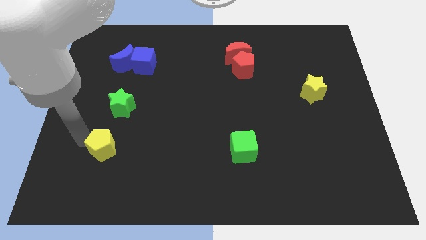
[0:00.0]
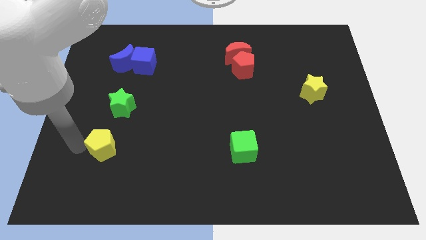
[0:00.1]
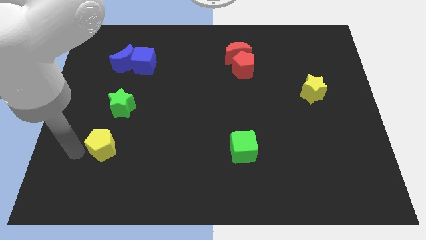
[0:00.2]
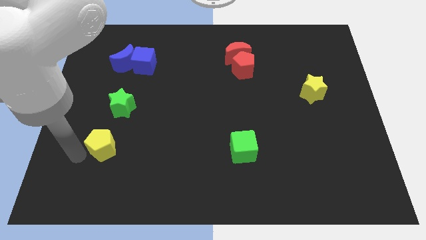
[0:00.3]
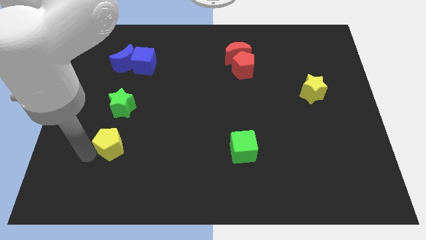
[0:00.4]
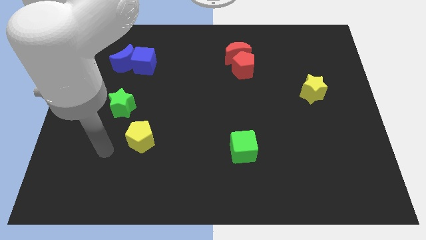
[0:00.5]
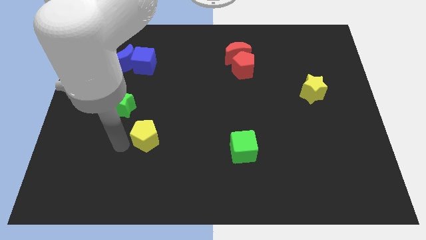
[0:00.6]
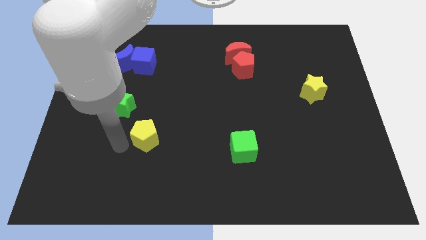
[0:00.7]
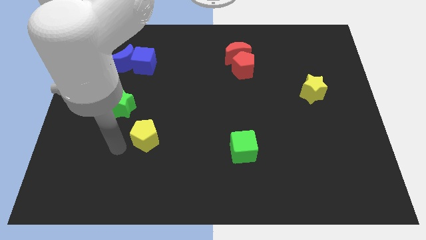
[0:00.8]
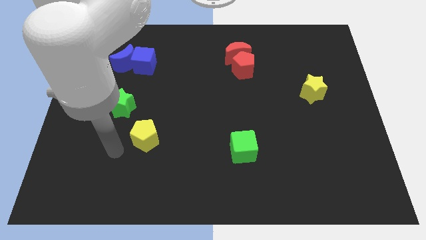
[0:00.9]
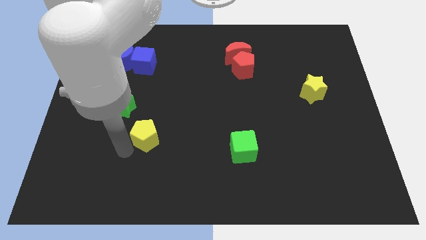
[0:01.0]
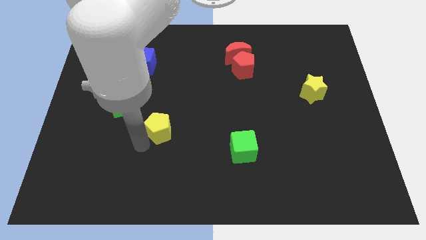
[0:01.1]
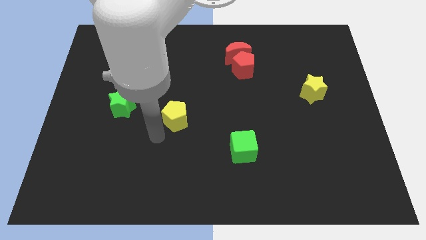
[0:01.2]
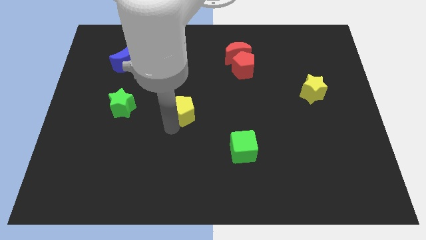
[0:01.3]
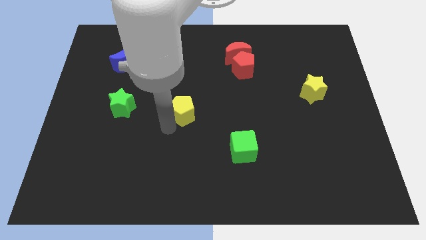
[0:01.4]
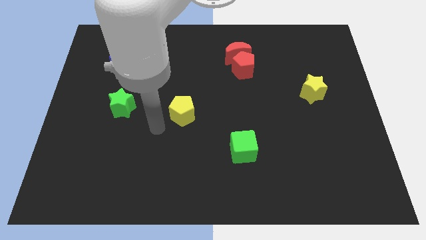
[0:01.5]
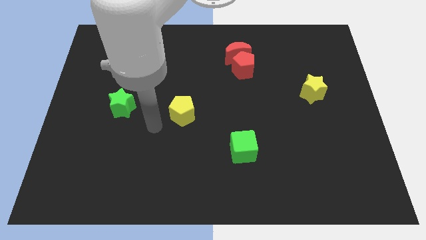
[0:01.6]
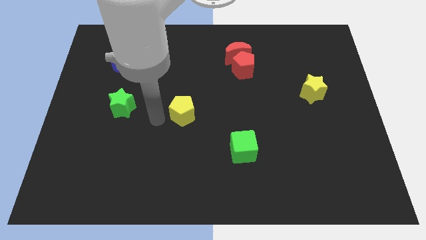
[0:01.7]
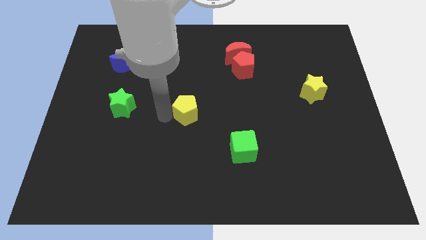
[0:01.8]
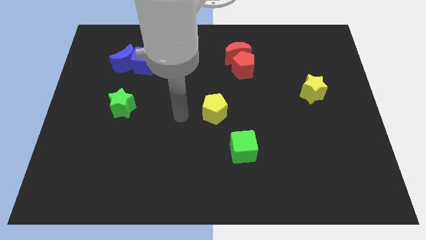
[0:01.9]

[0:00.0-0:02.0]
drag the yellow pentagon to the center of the board

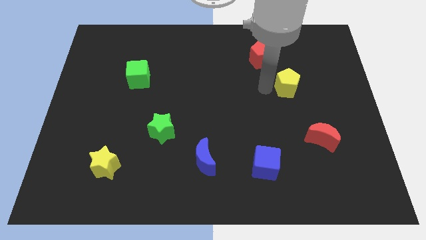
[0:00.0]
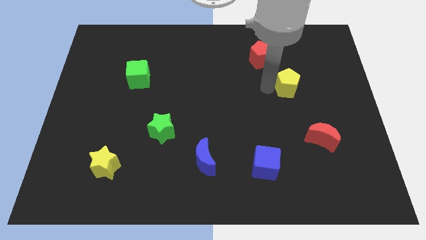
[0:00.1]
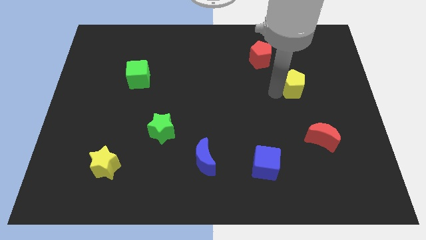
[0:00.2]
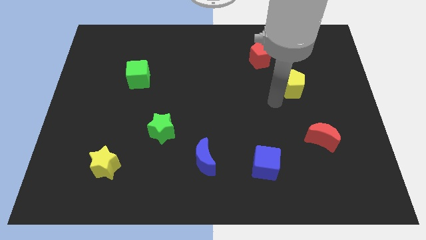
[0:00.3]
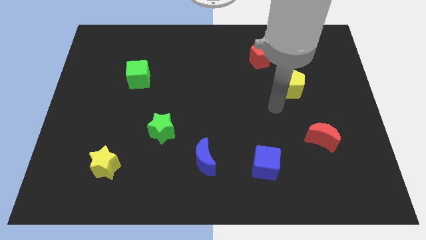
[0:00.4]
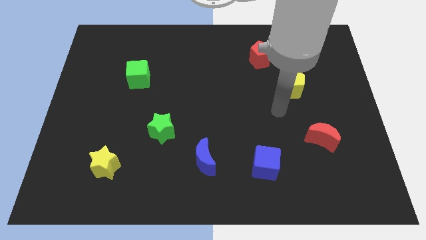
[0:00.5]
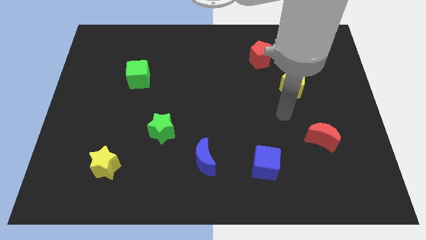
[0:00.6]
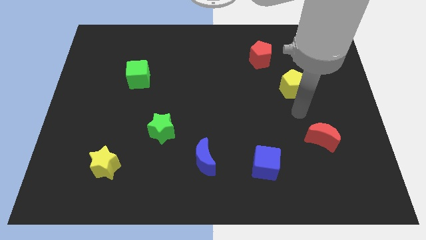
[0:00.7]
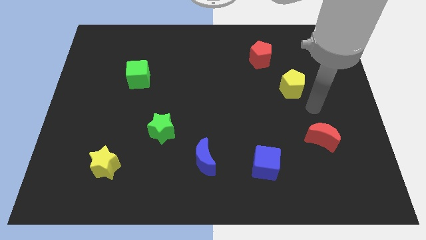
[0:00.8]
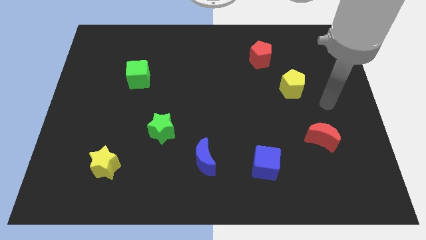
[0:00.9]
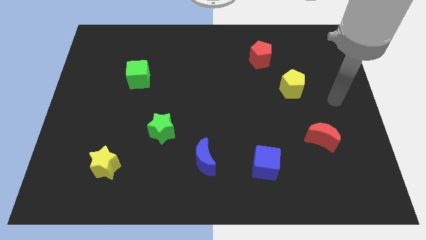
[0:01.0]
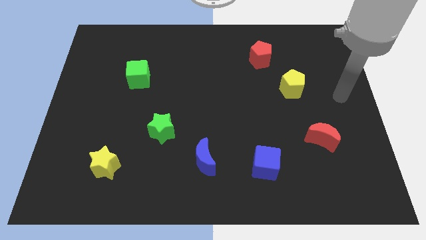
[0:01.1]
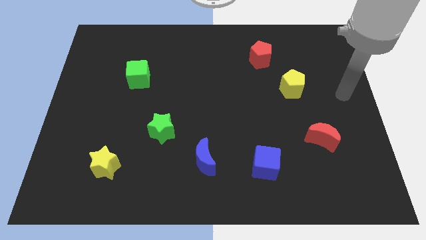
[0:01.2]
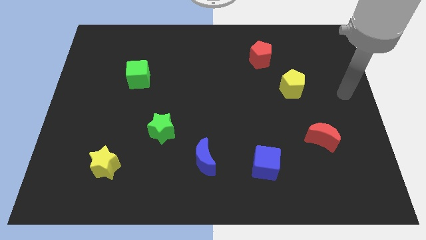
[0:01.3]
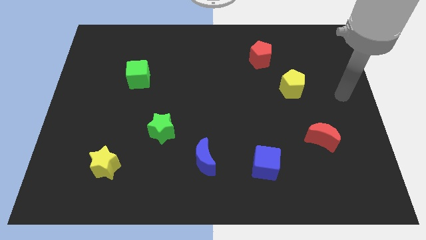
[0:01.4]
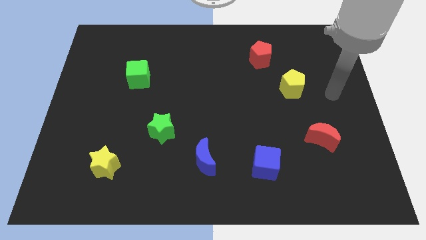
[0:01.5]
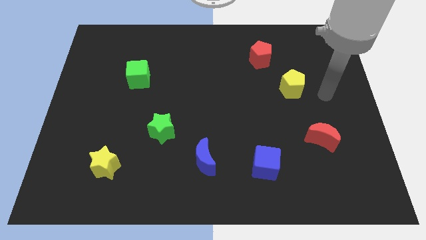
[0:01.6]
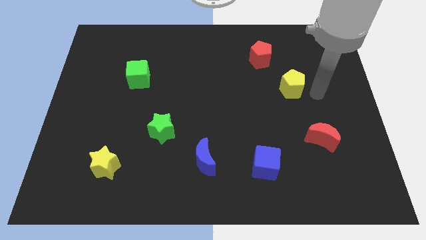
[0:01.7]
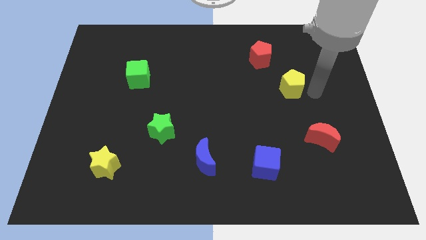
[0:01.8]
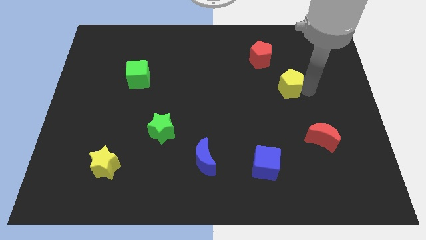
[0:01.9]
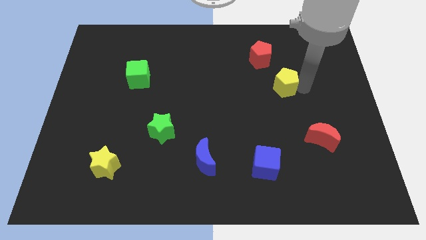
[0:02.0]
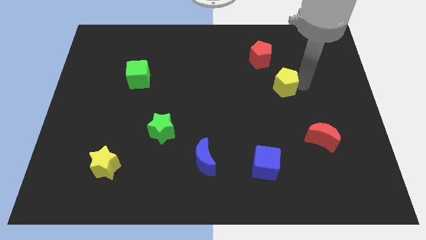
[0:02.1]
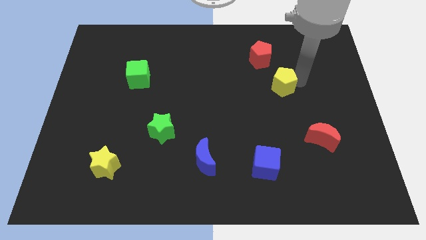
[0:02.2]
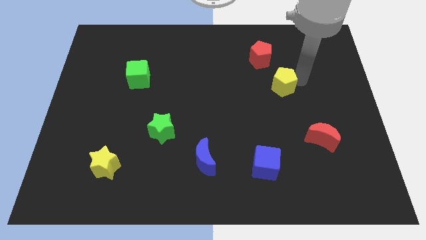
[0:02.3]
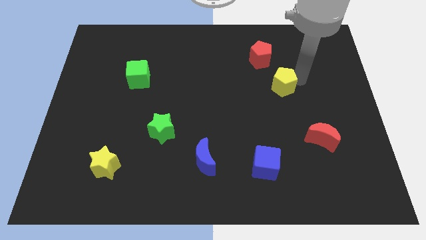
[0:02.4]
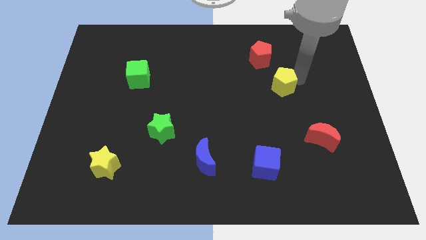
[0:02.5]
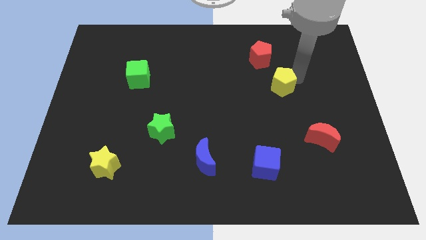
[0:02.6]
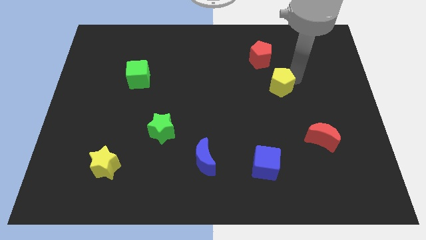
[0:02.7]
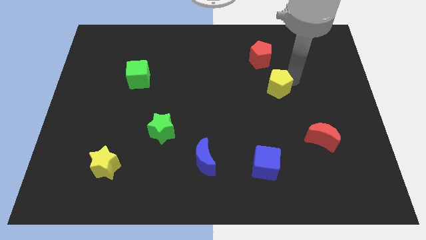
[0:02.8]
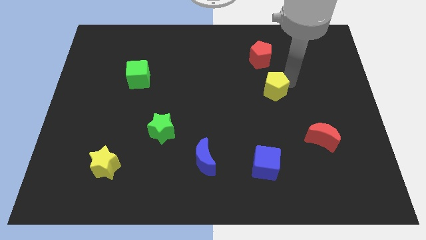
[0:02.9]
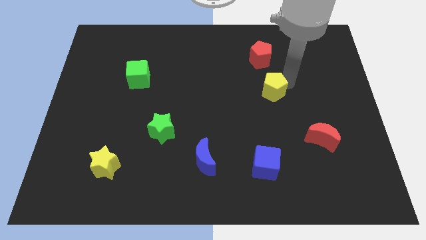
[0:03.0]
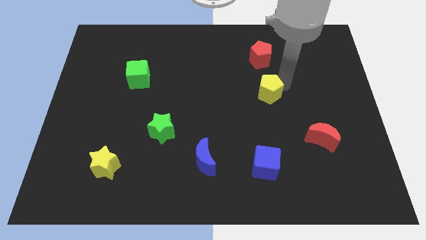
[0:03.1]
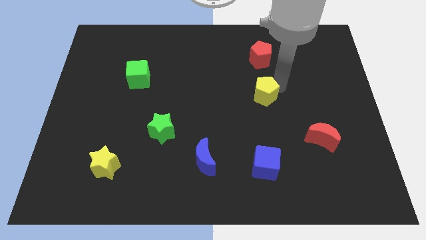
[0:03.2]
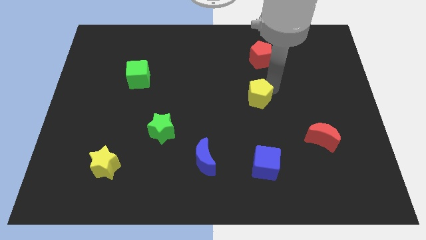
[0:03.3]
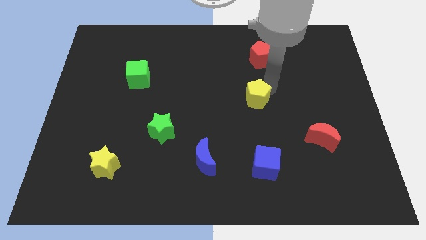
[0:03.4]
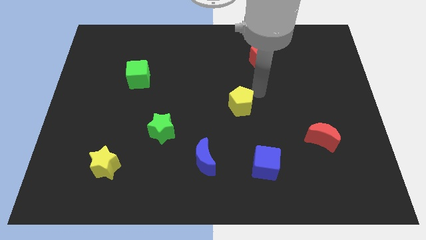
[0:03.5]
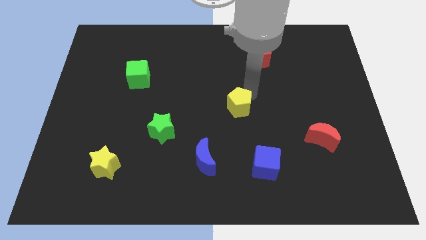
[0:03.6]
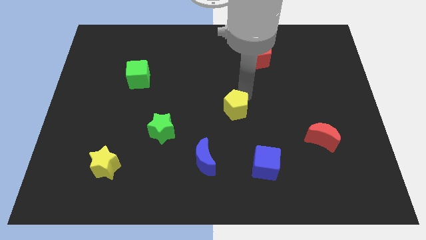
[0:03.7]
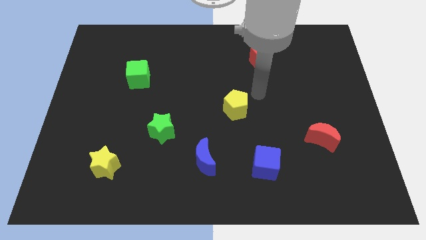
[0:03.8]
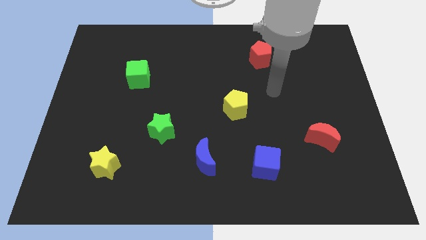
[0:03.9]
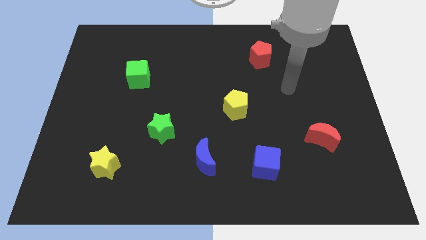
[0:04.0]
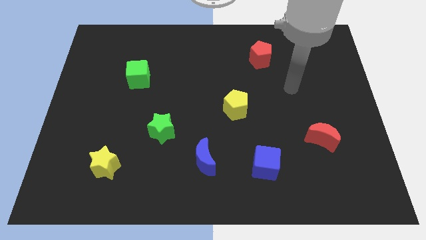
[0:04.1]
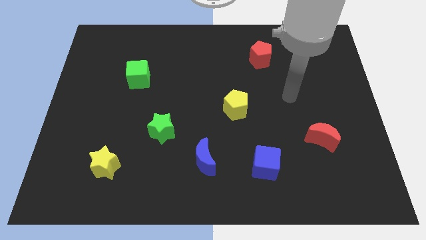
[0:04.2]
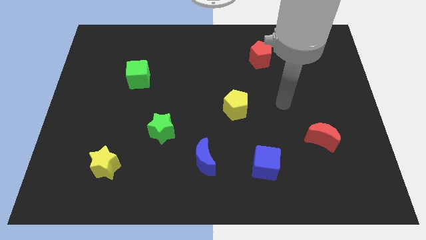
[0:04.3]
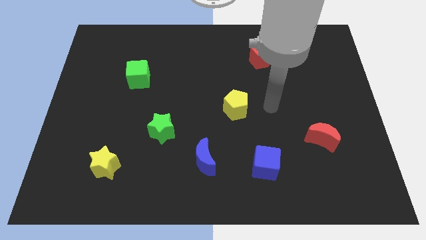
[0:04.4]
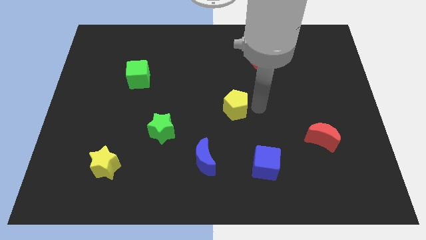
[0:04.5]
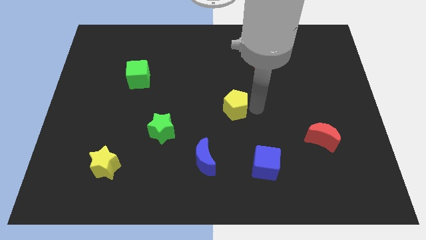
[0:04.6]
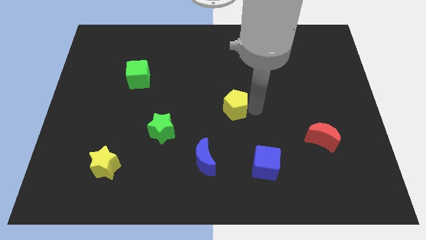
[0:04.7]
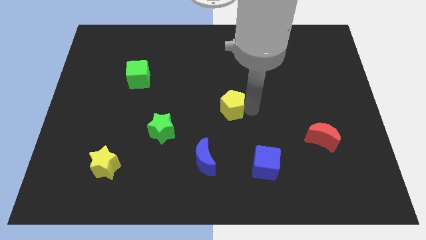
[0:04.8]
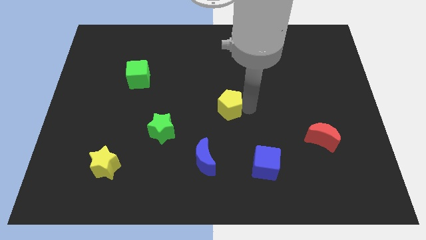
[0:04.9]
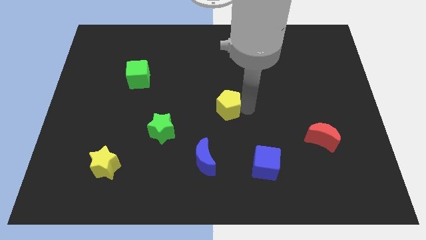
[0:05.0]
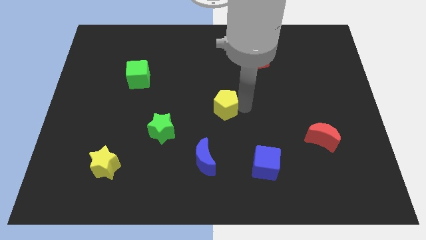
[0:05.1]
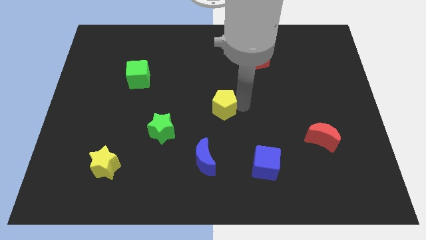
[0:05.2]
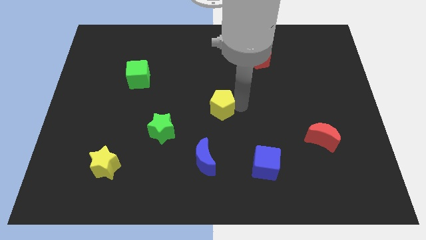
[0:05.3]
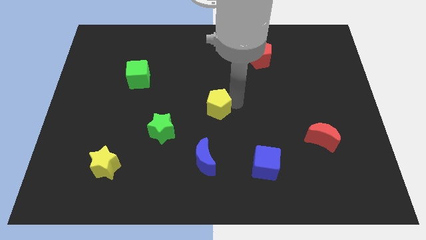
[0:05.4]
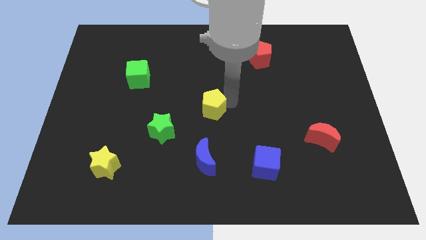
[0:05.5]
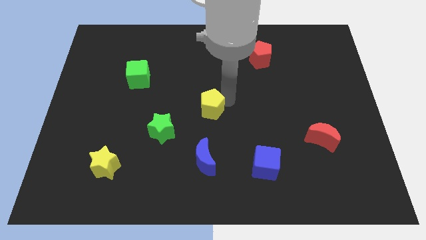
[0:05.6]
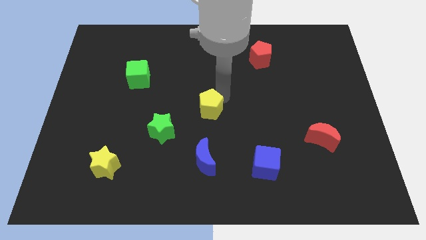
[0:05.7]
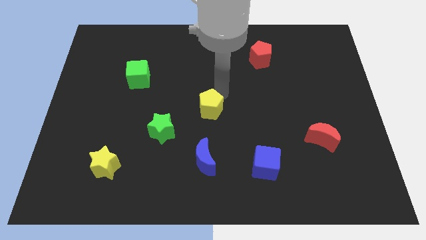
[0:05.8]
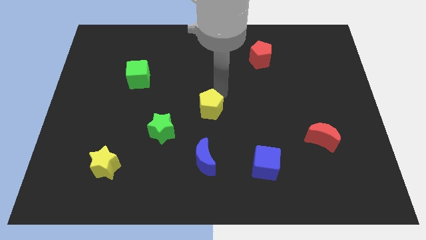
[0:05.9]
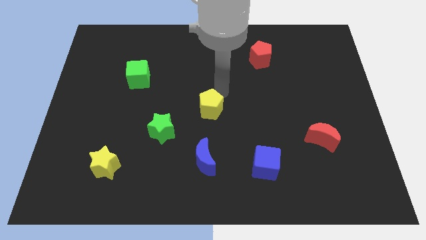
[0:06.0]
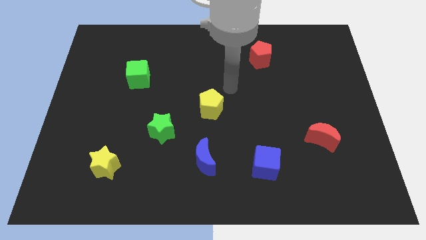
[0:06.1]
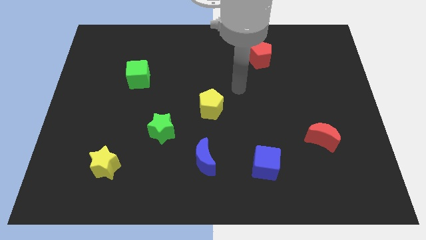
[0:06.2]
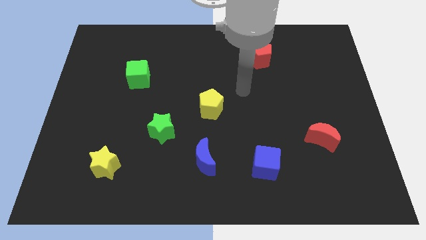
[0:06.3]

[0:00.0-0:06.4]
place the yellow pentagon towards the center of the board

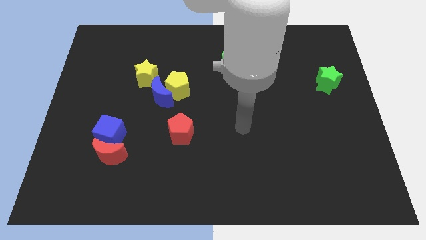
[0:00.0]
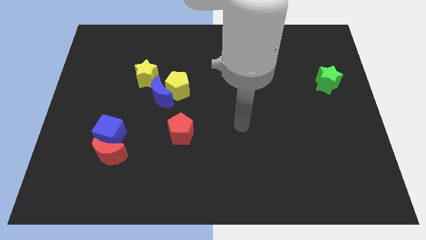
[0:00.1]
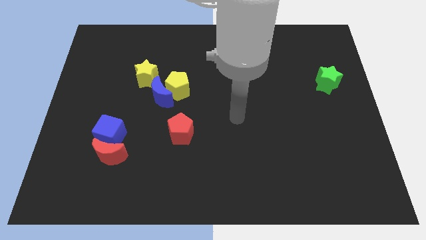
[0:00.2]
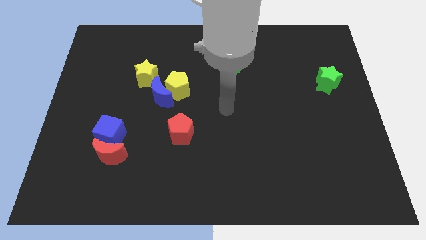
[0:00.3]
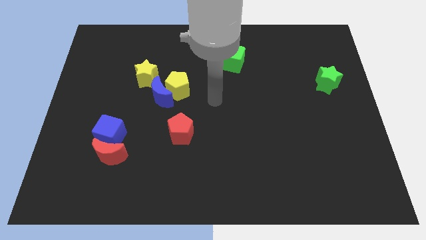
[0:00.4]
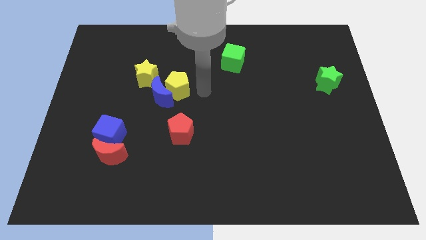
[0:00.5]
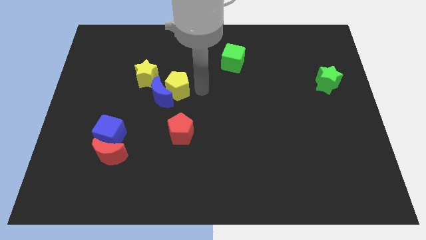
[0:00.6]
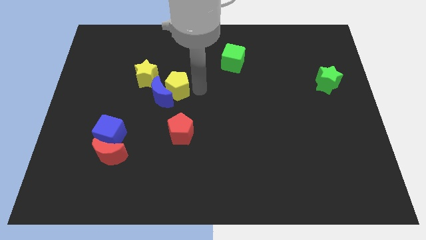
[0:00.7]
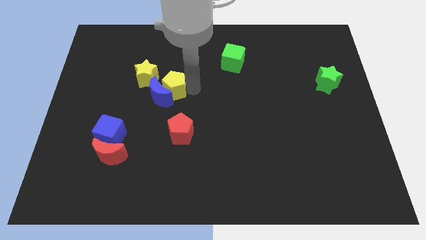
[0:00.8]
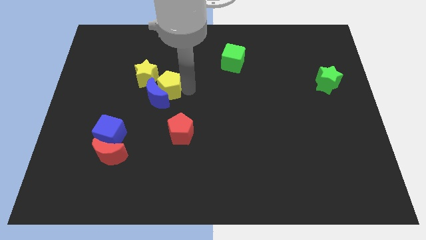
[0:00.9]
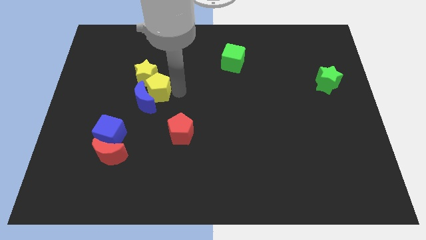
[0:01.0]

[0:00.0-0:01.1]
push the yellow pentagon close to the yellow star
